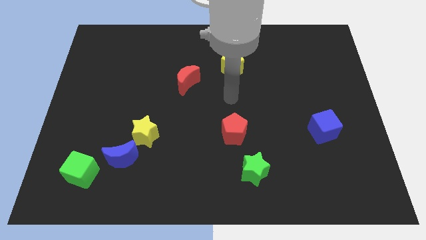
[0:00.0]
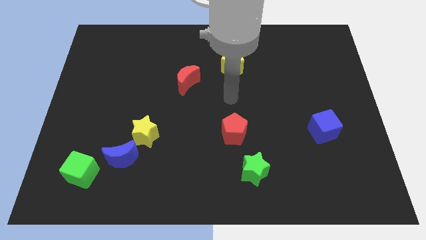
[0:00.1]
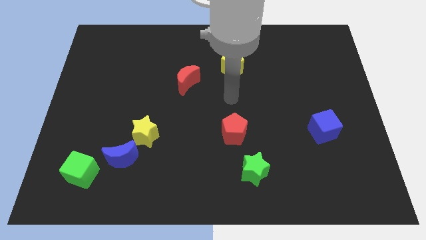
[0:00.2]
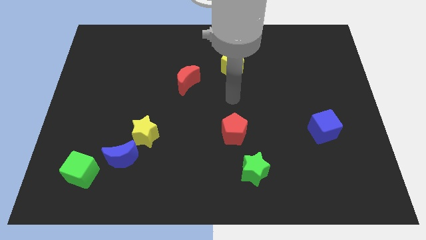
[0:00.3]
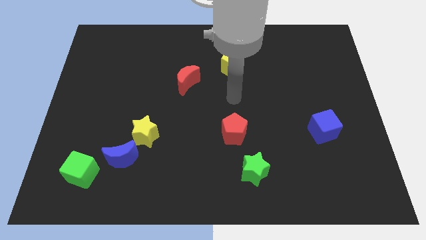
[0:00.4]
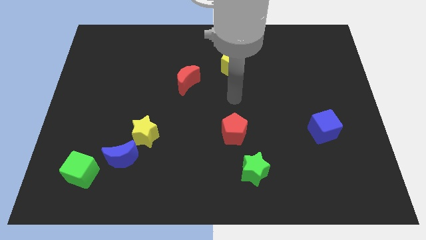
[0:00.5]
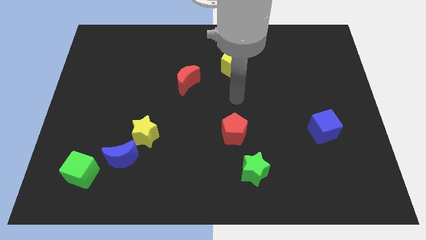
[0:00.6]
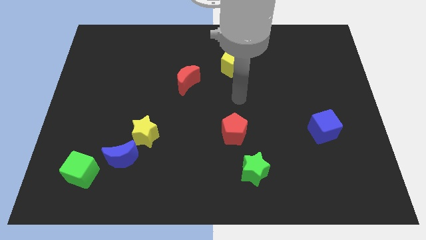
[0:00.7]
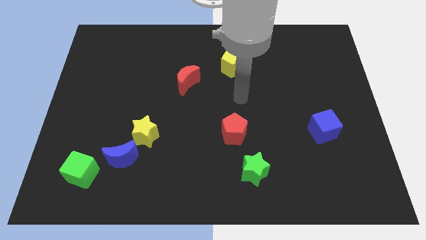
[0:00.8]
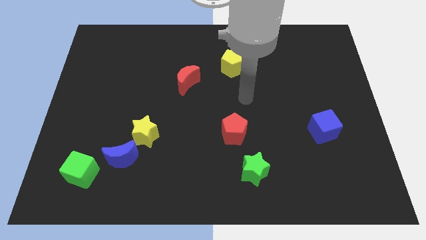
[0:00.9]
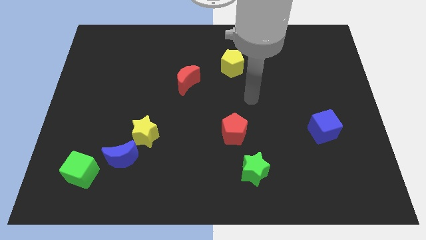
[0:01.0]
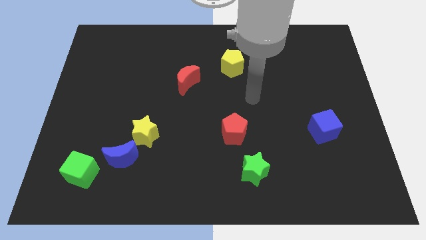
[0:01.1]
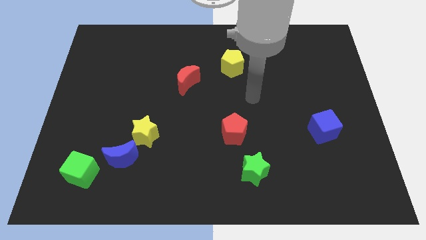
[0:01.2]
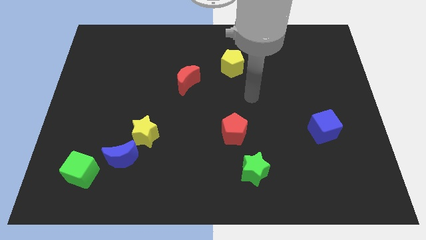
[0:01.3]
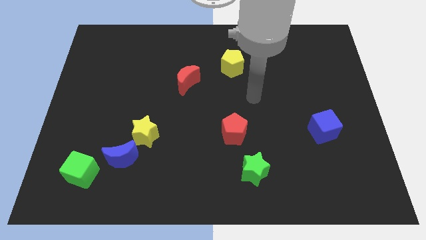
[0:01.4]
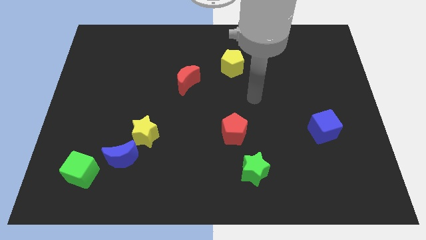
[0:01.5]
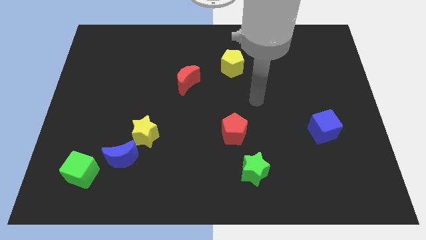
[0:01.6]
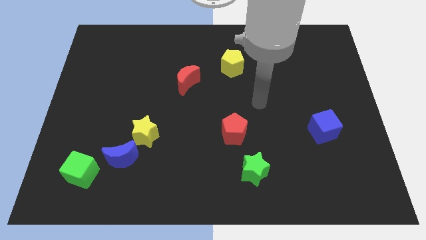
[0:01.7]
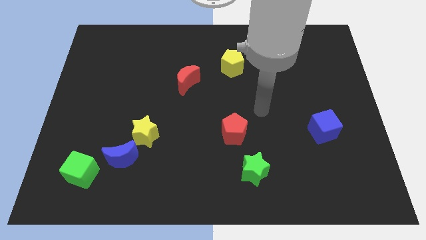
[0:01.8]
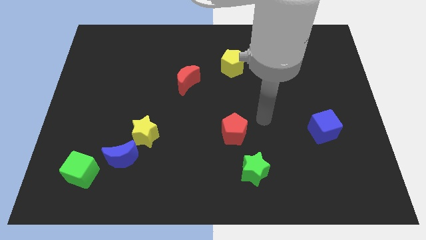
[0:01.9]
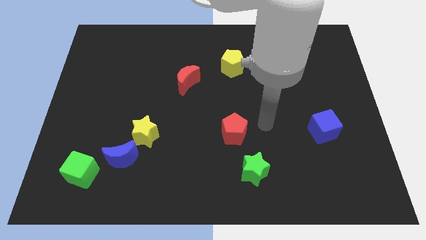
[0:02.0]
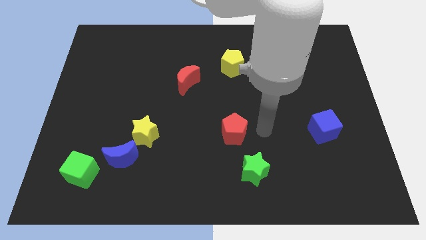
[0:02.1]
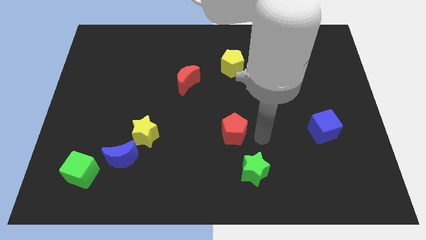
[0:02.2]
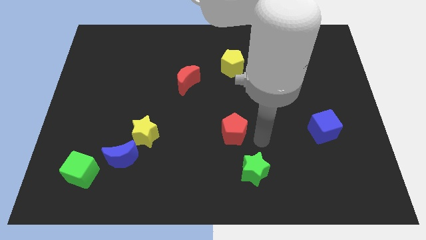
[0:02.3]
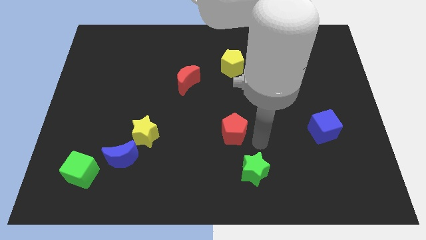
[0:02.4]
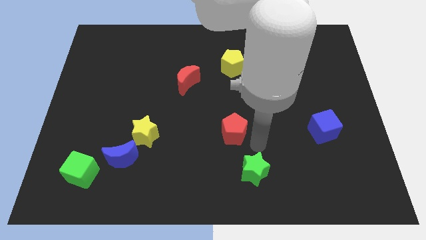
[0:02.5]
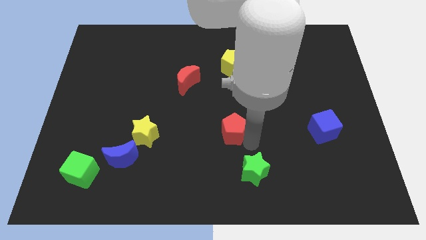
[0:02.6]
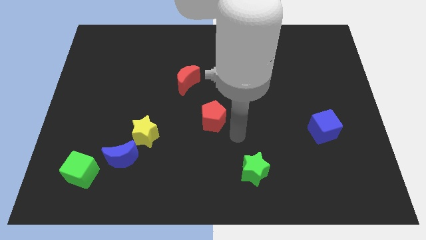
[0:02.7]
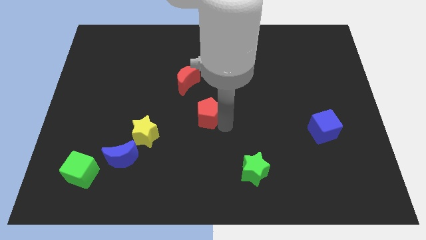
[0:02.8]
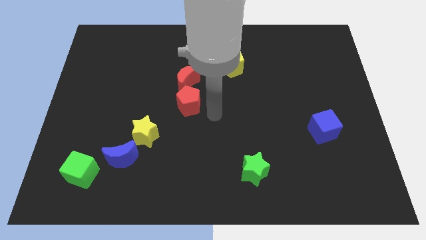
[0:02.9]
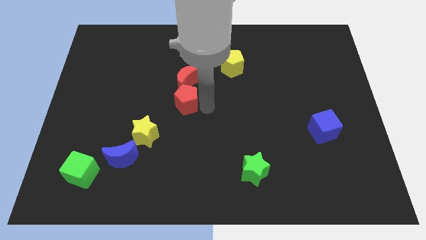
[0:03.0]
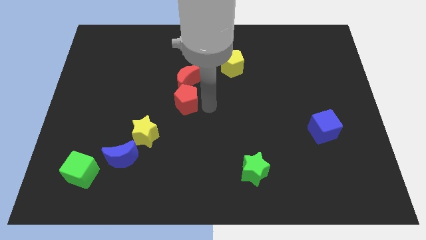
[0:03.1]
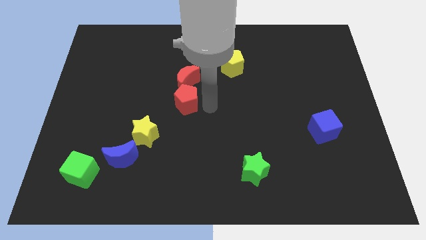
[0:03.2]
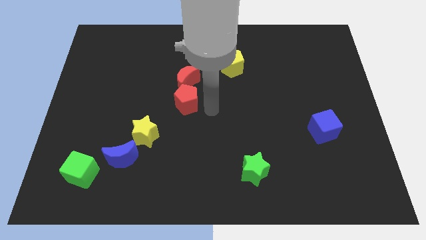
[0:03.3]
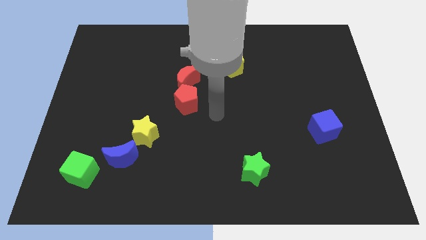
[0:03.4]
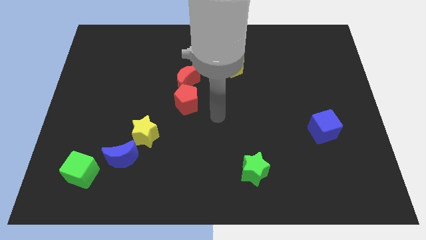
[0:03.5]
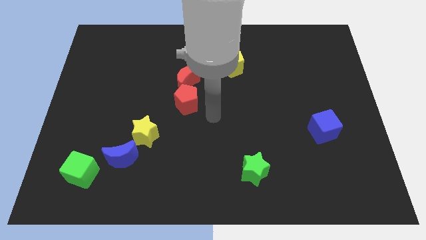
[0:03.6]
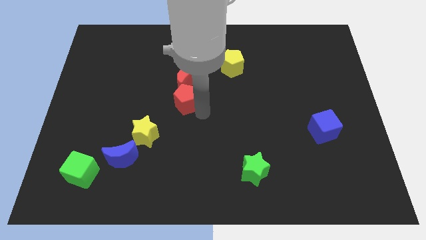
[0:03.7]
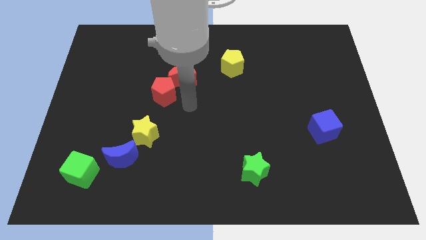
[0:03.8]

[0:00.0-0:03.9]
move the red pentagon towards the red crescent

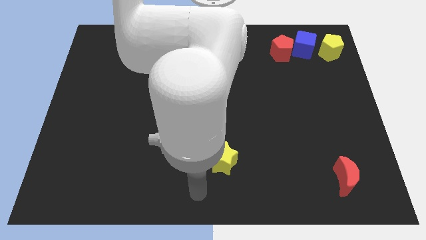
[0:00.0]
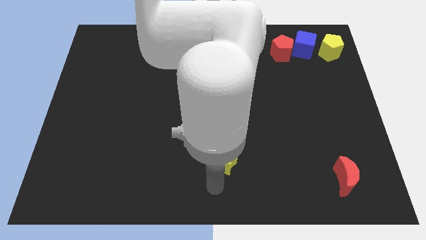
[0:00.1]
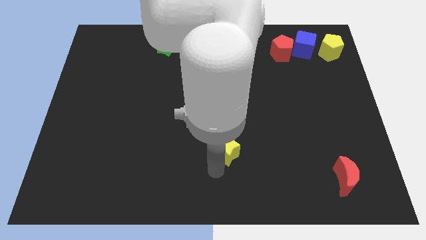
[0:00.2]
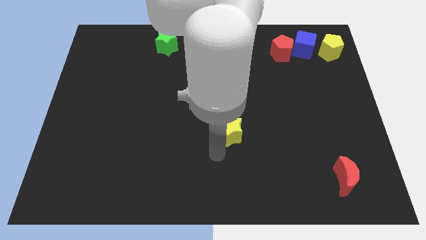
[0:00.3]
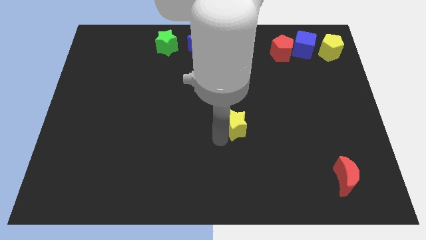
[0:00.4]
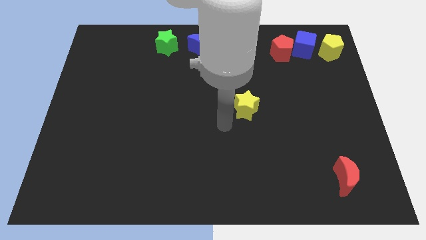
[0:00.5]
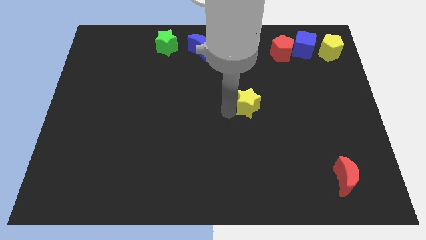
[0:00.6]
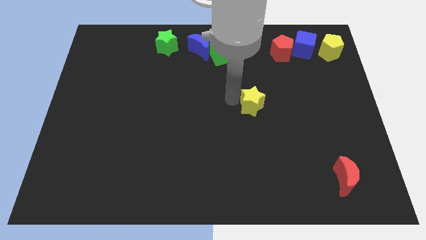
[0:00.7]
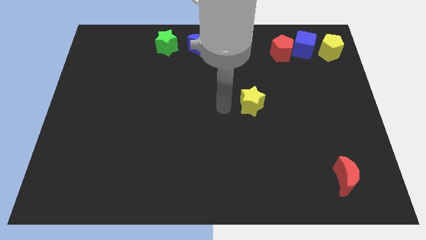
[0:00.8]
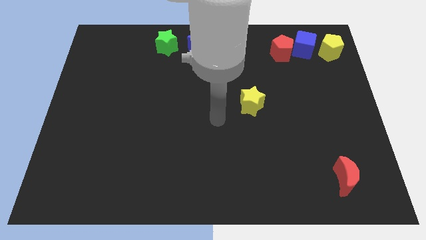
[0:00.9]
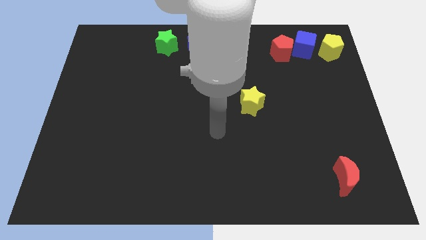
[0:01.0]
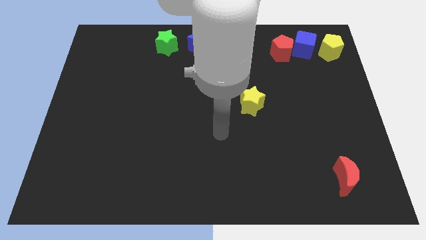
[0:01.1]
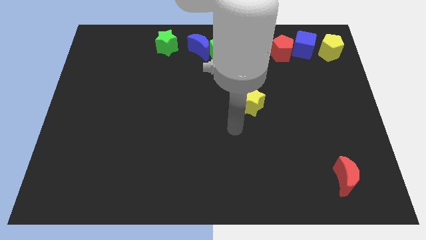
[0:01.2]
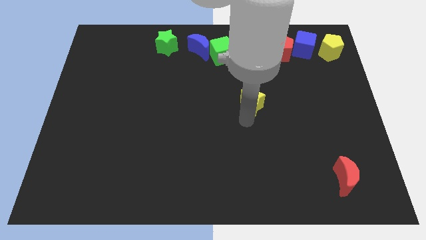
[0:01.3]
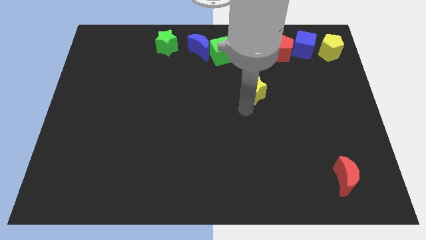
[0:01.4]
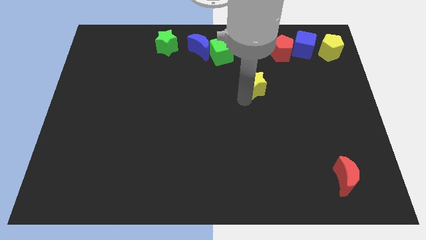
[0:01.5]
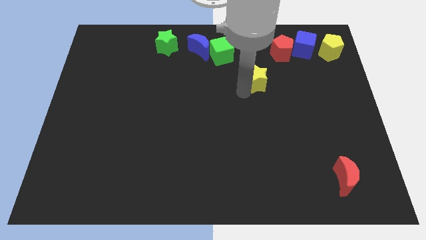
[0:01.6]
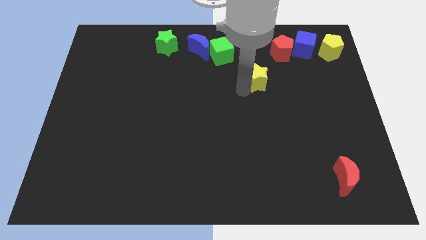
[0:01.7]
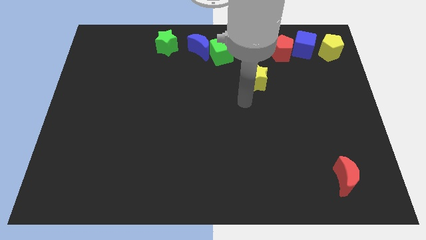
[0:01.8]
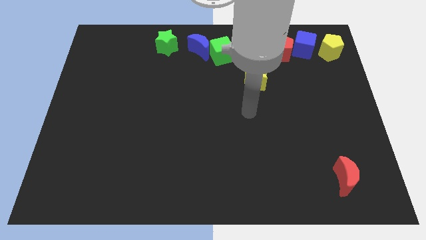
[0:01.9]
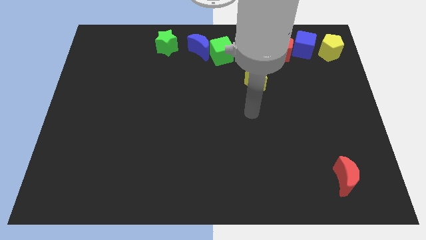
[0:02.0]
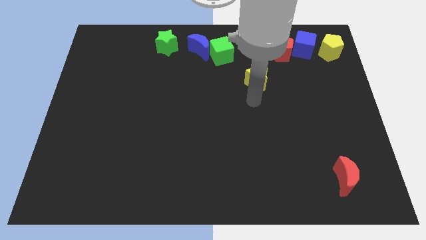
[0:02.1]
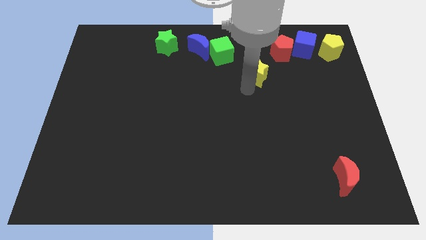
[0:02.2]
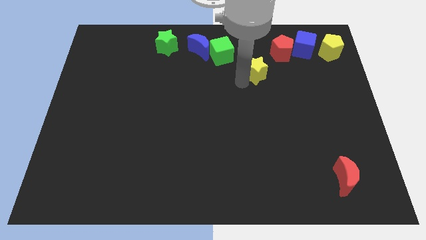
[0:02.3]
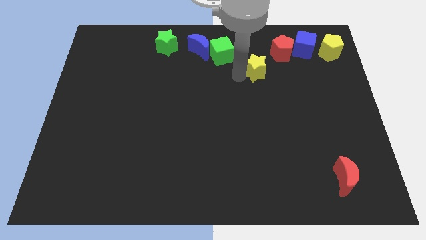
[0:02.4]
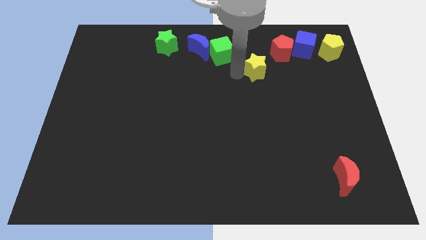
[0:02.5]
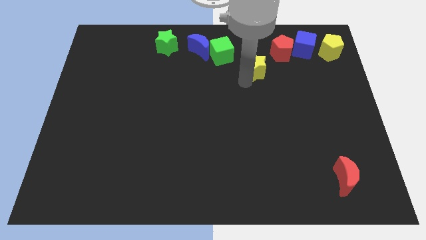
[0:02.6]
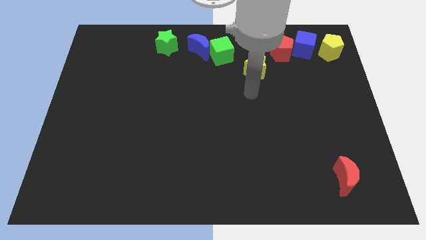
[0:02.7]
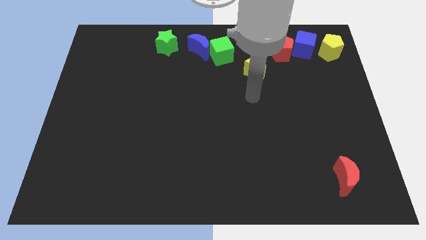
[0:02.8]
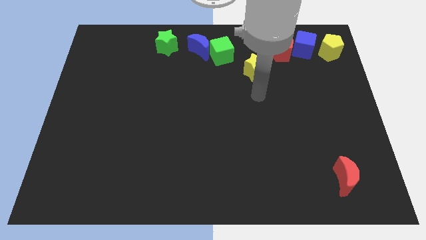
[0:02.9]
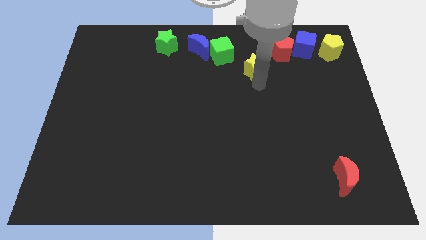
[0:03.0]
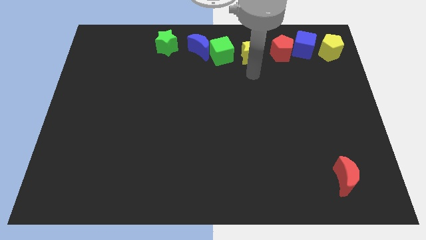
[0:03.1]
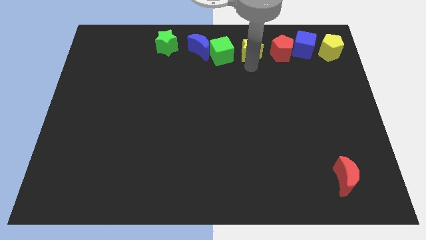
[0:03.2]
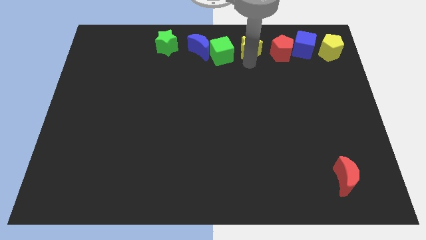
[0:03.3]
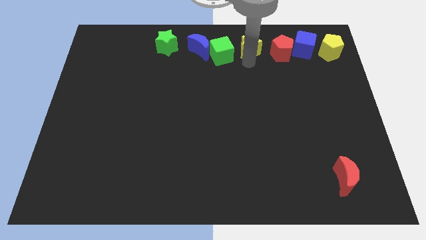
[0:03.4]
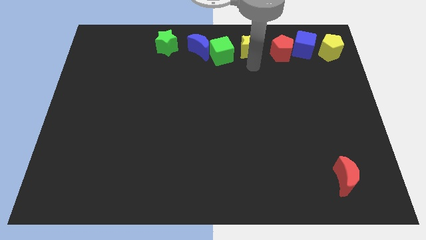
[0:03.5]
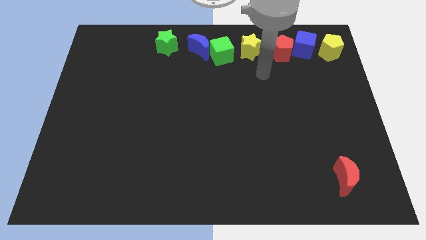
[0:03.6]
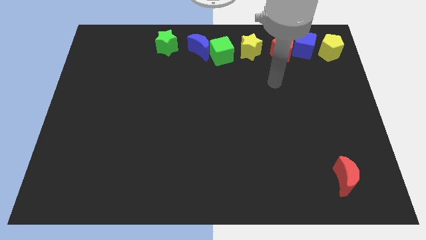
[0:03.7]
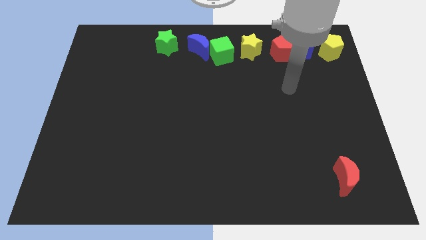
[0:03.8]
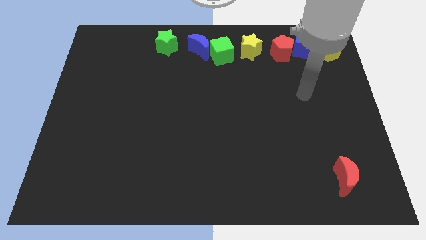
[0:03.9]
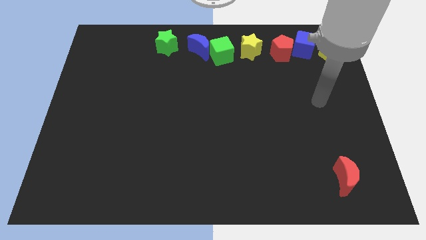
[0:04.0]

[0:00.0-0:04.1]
move the yellow star to the right of the green cube

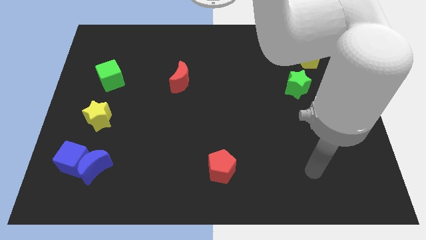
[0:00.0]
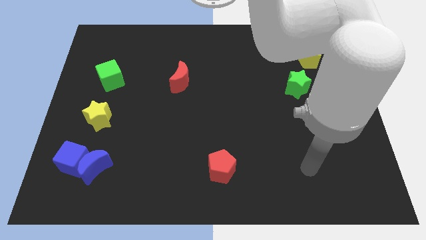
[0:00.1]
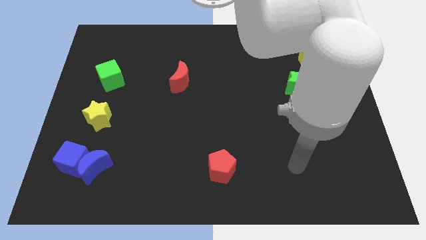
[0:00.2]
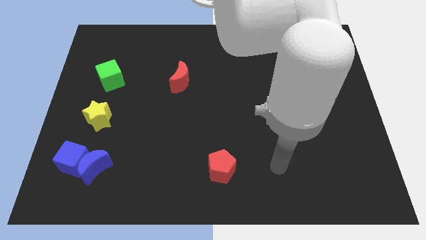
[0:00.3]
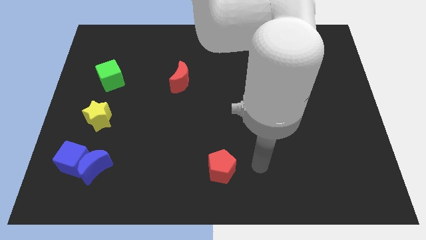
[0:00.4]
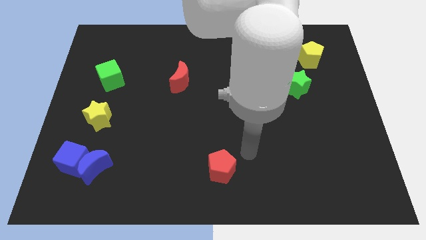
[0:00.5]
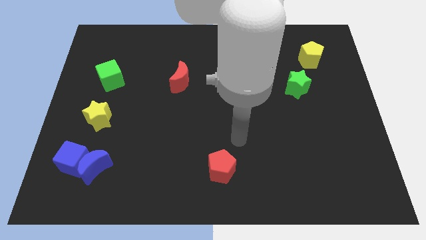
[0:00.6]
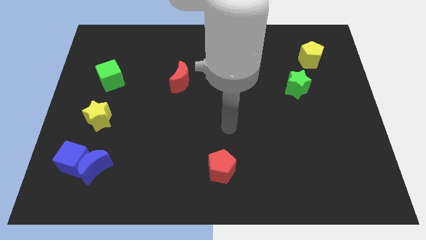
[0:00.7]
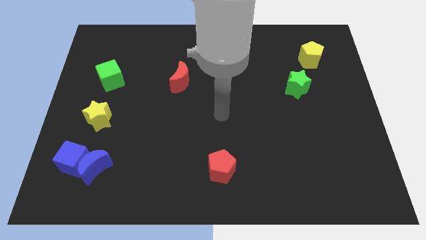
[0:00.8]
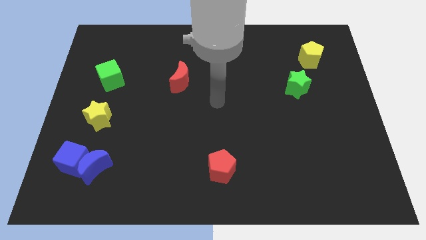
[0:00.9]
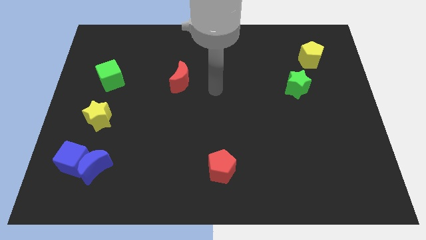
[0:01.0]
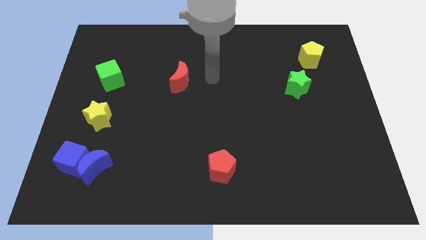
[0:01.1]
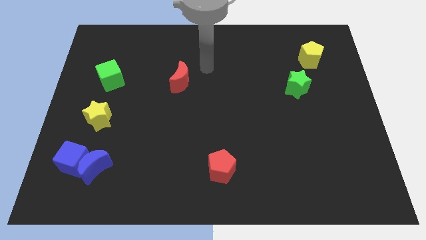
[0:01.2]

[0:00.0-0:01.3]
move your hand to the right of the red crescent
